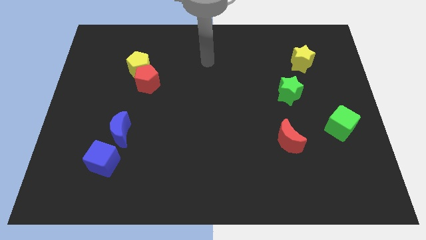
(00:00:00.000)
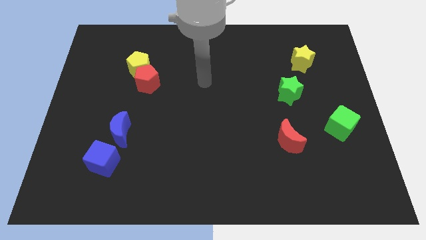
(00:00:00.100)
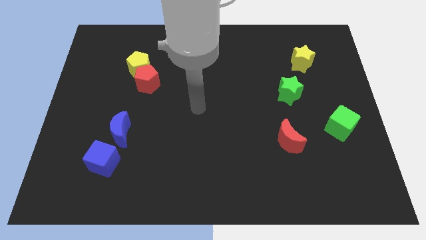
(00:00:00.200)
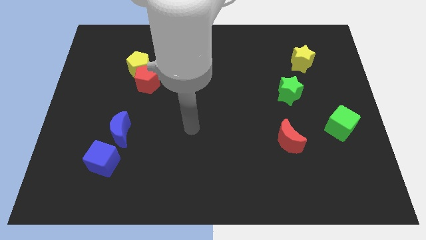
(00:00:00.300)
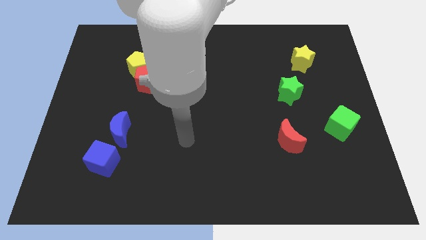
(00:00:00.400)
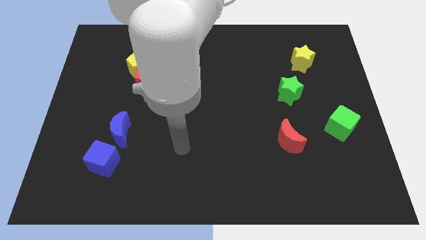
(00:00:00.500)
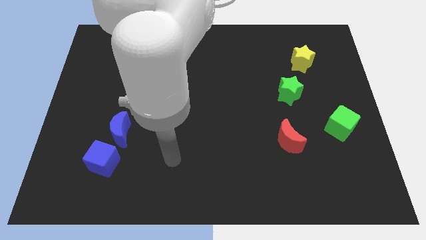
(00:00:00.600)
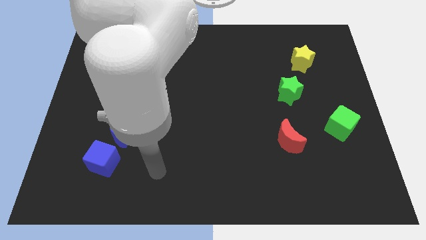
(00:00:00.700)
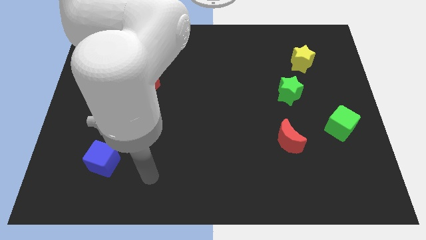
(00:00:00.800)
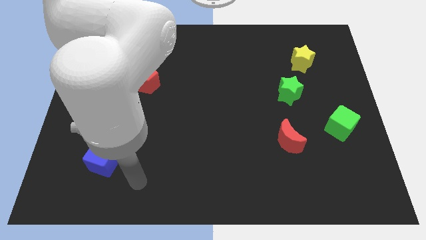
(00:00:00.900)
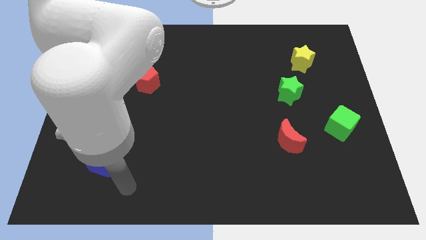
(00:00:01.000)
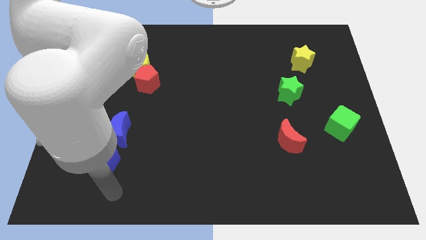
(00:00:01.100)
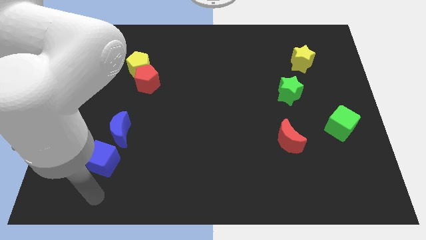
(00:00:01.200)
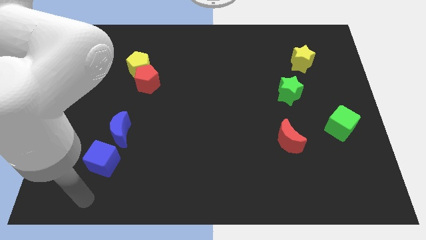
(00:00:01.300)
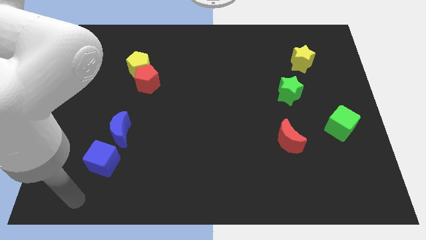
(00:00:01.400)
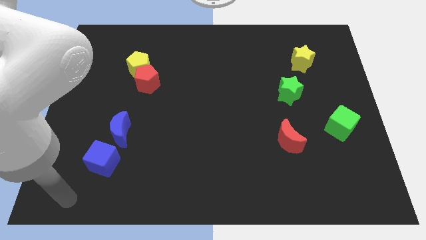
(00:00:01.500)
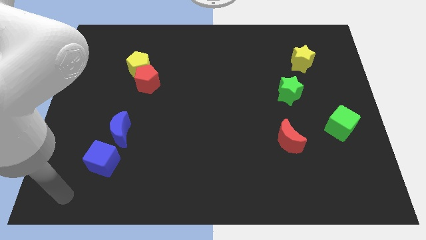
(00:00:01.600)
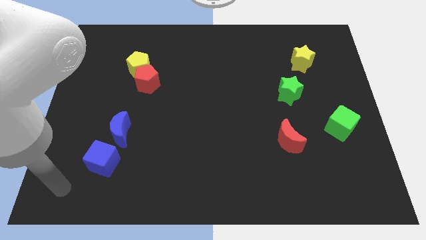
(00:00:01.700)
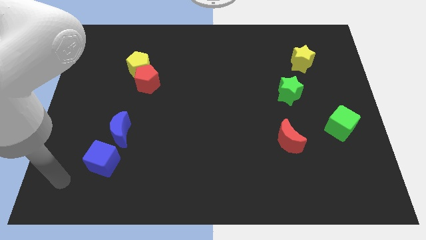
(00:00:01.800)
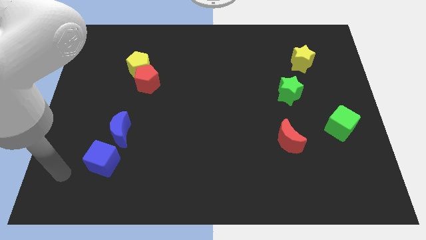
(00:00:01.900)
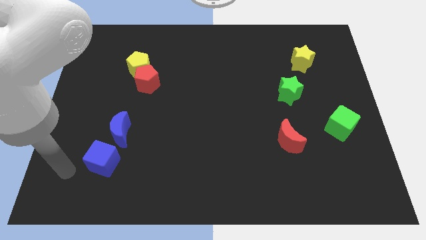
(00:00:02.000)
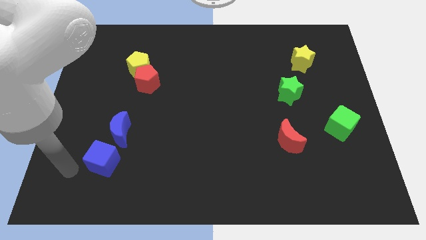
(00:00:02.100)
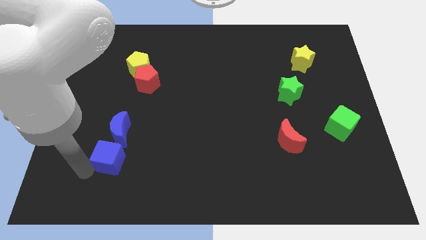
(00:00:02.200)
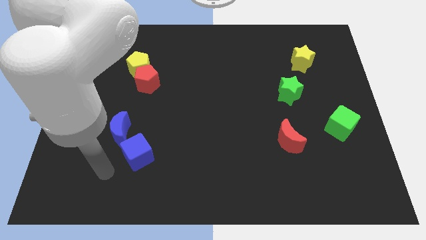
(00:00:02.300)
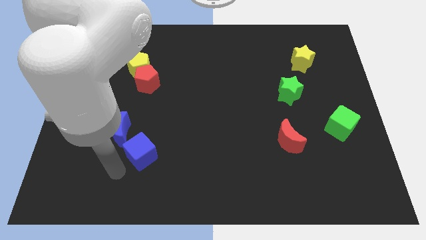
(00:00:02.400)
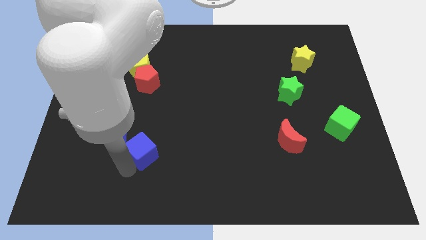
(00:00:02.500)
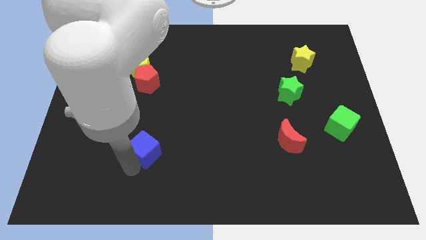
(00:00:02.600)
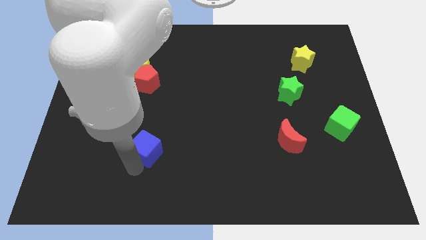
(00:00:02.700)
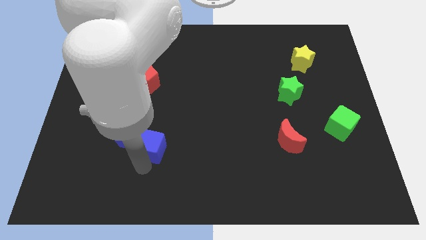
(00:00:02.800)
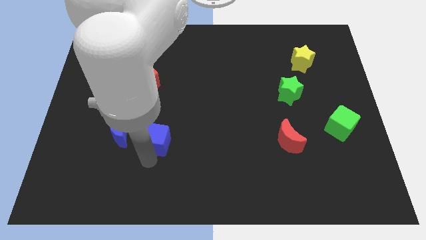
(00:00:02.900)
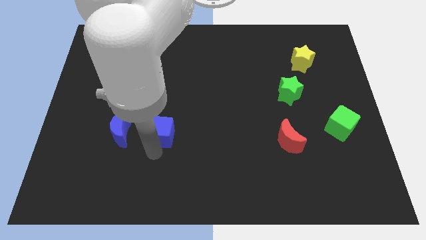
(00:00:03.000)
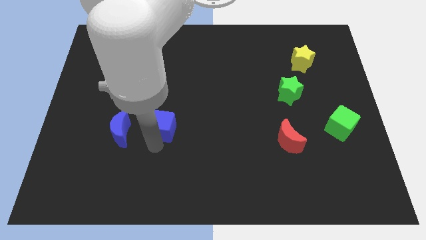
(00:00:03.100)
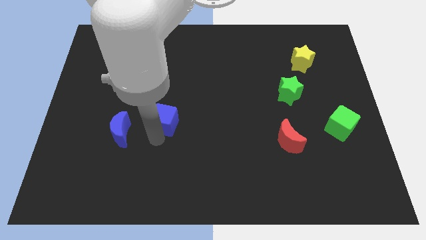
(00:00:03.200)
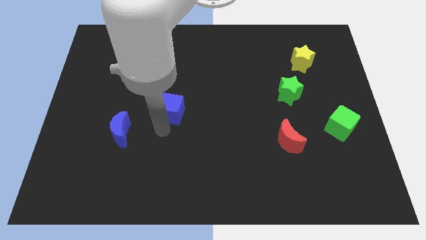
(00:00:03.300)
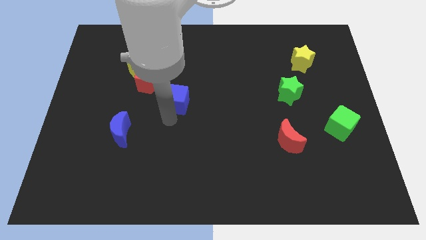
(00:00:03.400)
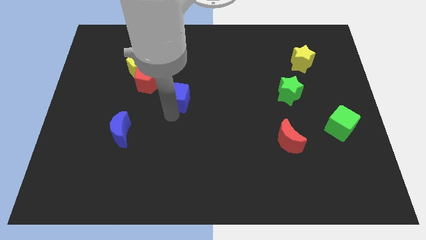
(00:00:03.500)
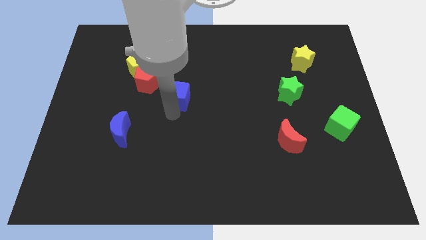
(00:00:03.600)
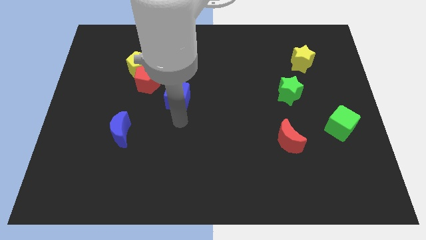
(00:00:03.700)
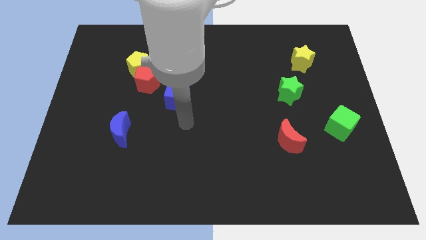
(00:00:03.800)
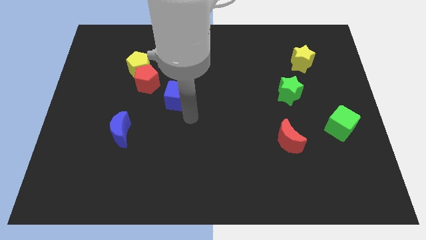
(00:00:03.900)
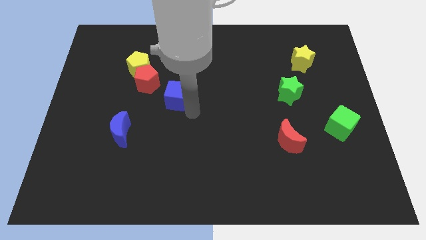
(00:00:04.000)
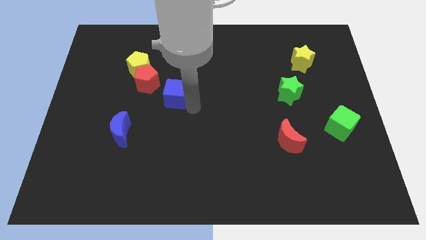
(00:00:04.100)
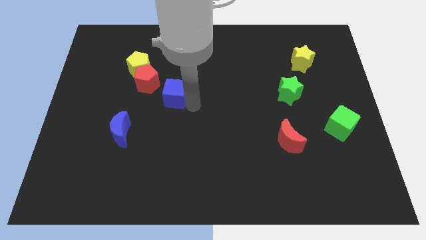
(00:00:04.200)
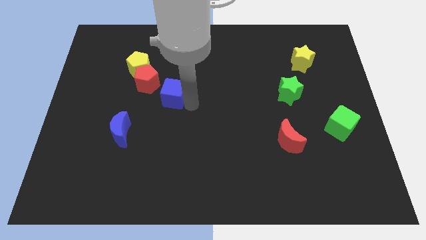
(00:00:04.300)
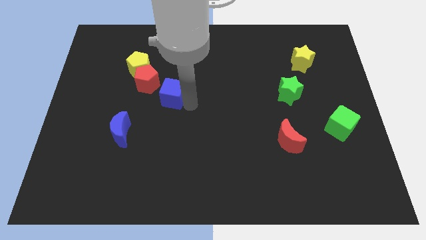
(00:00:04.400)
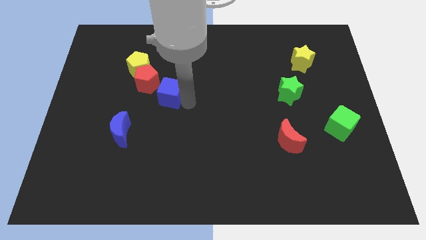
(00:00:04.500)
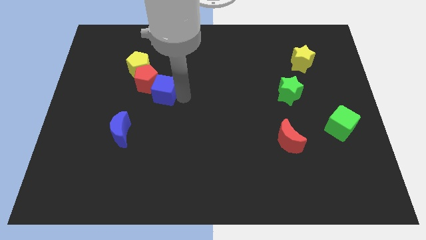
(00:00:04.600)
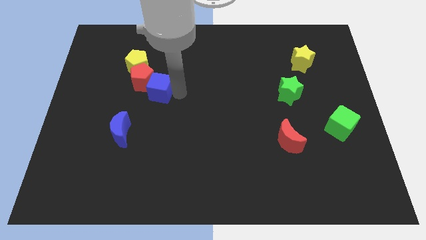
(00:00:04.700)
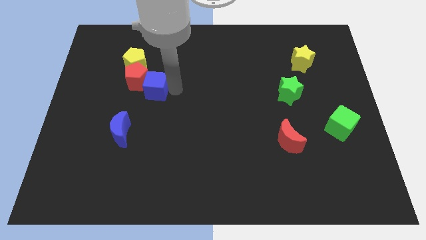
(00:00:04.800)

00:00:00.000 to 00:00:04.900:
slide the blue cube to the red pentagon

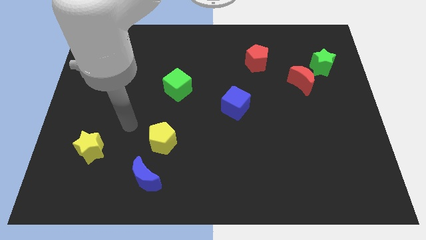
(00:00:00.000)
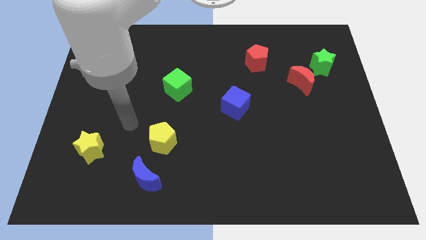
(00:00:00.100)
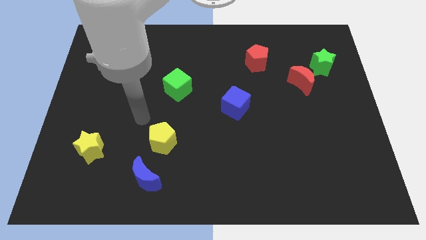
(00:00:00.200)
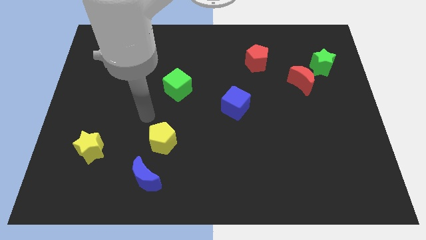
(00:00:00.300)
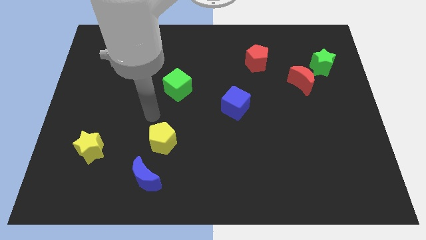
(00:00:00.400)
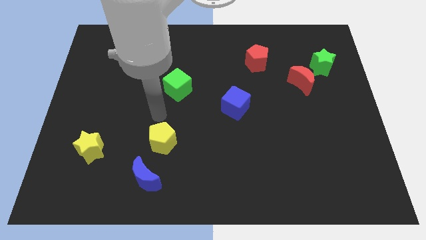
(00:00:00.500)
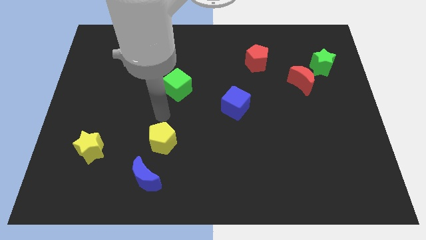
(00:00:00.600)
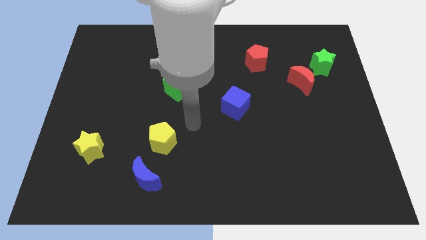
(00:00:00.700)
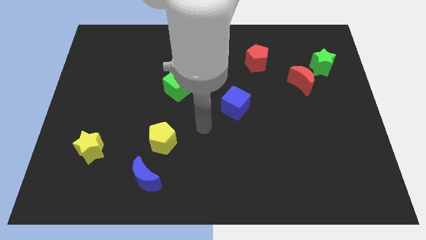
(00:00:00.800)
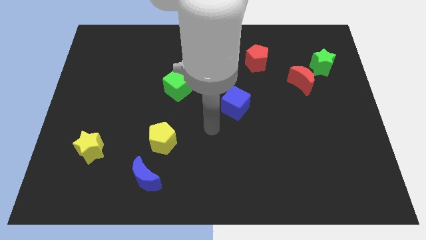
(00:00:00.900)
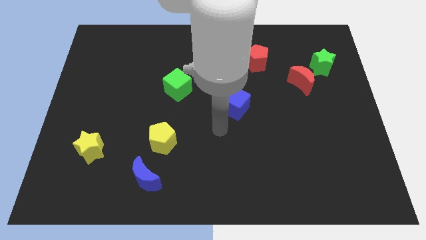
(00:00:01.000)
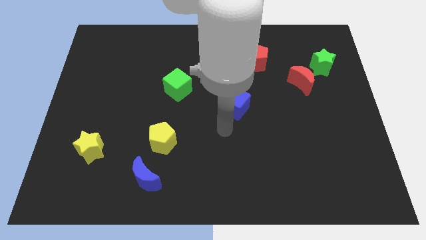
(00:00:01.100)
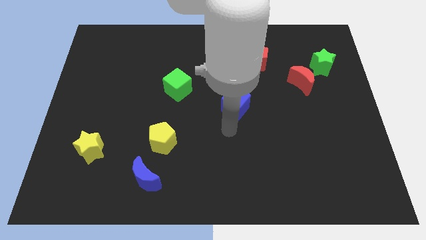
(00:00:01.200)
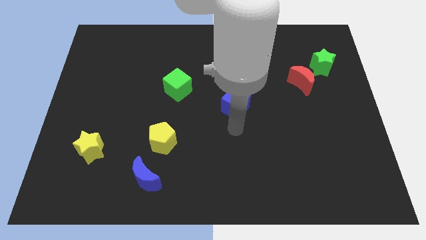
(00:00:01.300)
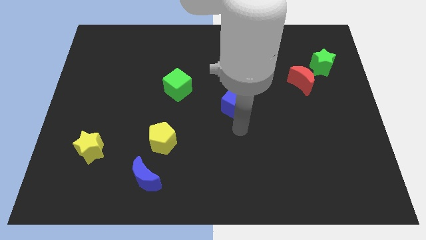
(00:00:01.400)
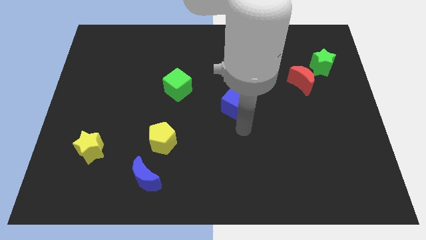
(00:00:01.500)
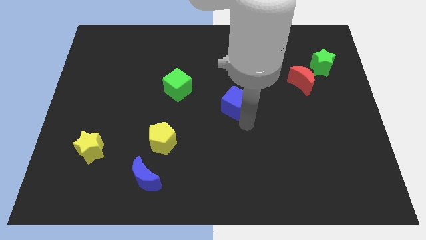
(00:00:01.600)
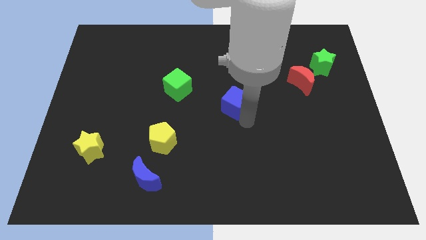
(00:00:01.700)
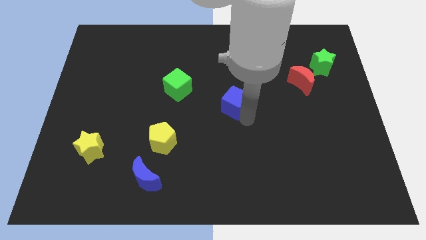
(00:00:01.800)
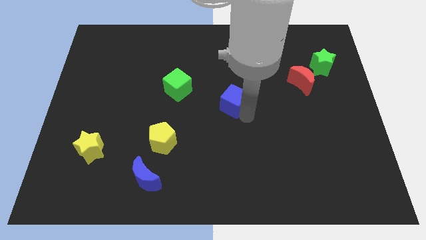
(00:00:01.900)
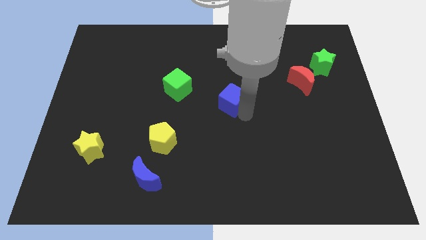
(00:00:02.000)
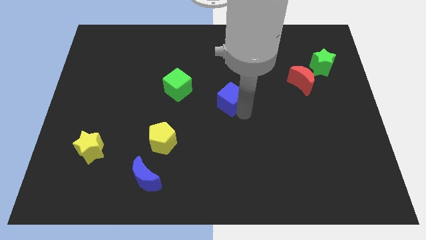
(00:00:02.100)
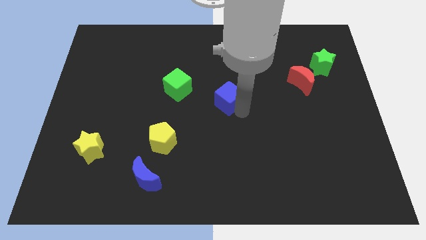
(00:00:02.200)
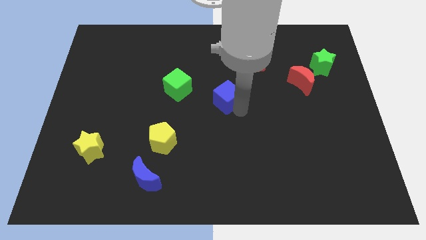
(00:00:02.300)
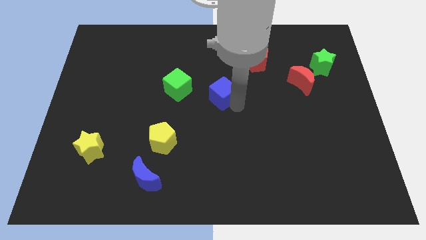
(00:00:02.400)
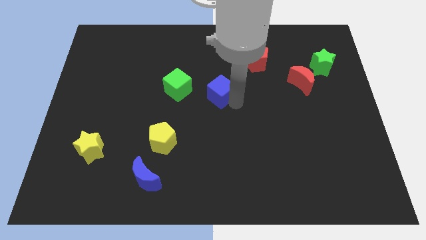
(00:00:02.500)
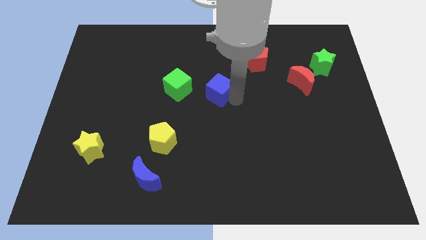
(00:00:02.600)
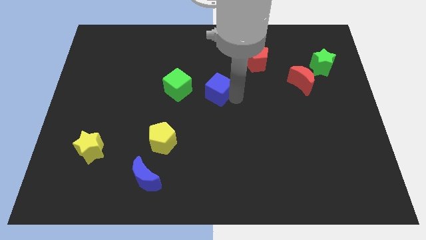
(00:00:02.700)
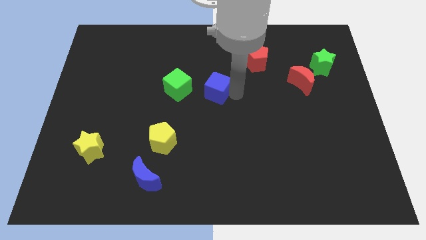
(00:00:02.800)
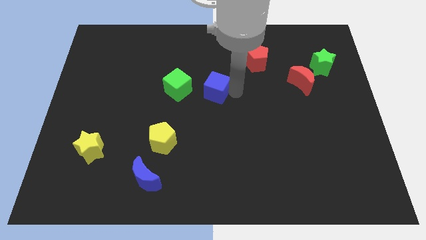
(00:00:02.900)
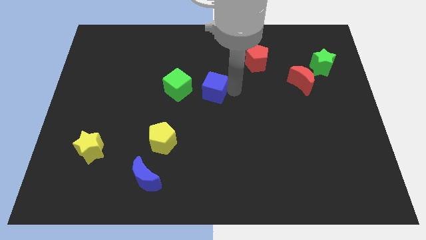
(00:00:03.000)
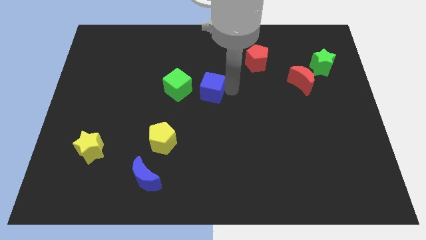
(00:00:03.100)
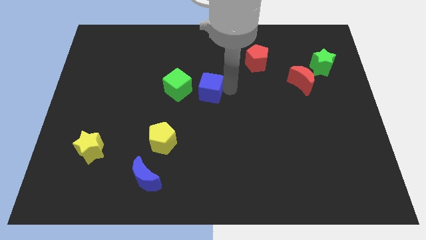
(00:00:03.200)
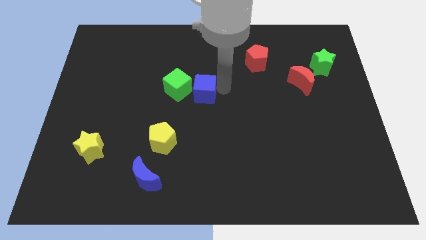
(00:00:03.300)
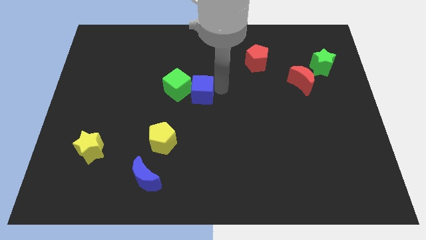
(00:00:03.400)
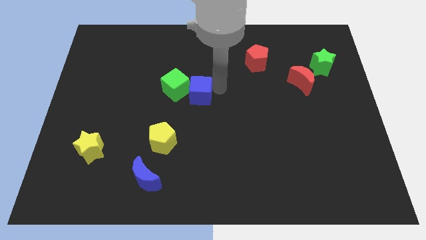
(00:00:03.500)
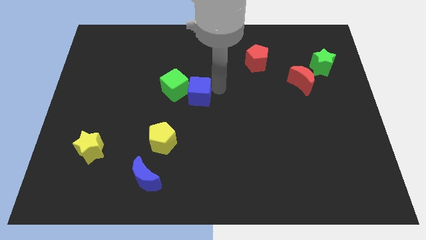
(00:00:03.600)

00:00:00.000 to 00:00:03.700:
put the blue cube towards the green cube

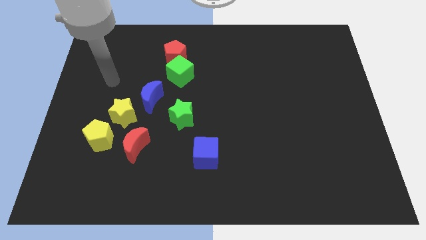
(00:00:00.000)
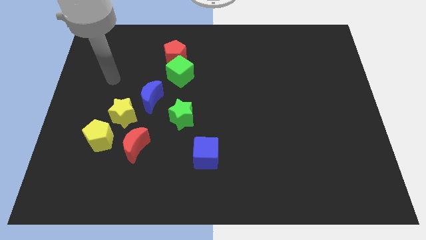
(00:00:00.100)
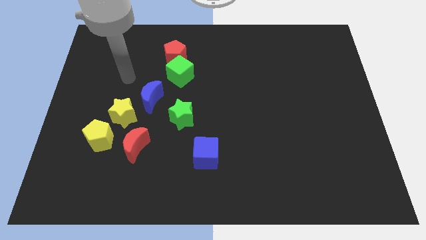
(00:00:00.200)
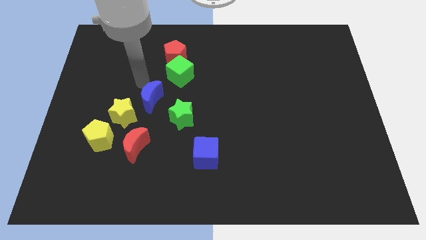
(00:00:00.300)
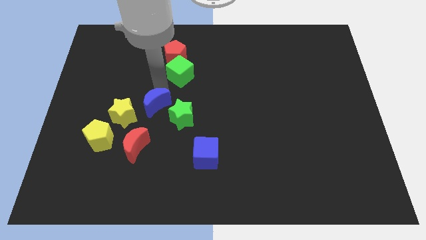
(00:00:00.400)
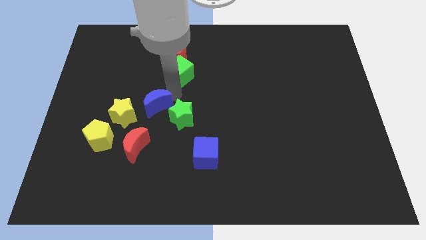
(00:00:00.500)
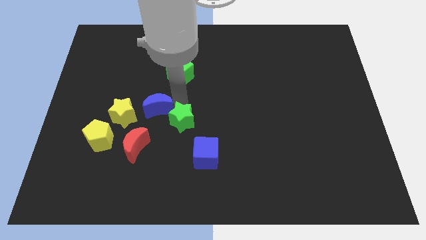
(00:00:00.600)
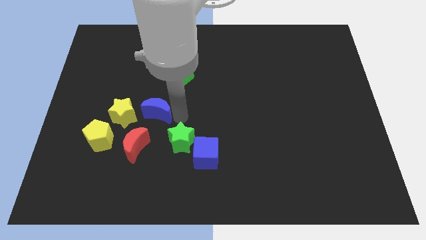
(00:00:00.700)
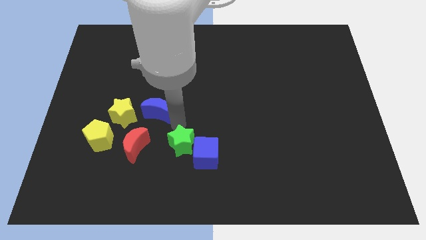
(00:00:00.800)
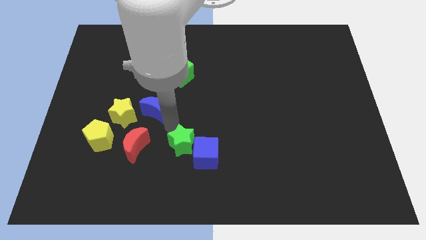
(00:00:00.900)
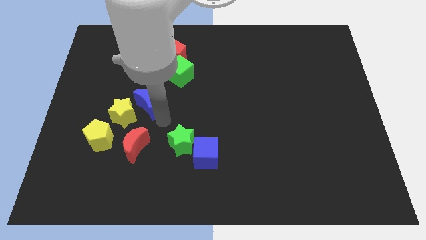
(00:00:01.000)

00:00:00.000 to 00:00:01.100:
move the green star to the blue cube
